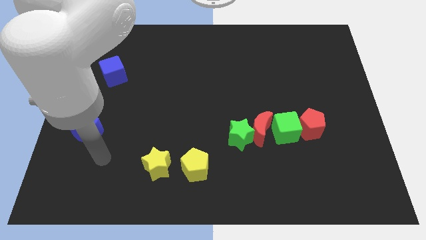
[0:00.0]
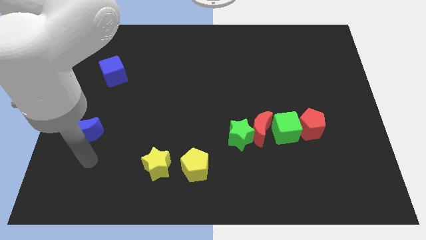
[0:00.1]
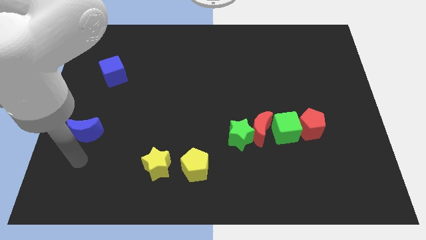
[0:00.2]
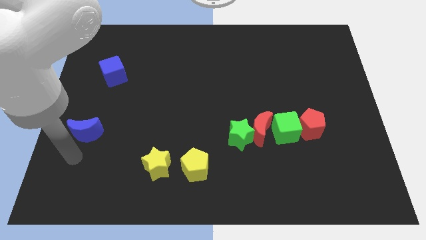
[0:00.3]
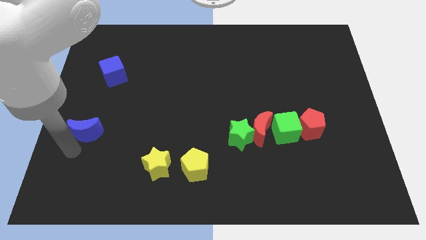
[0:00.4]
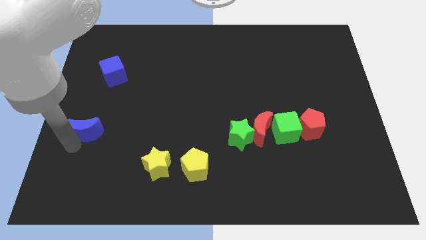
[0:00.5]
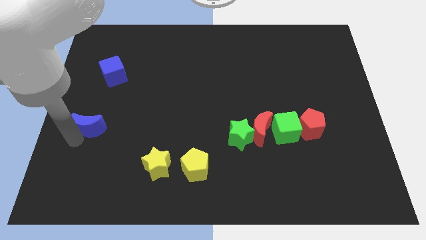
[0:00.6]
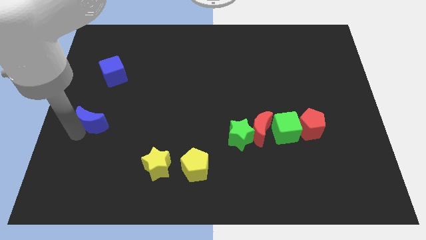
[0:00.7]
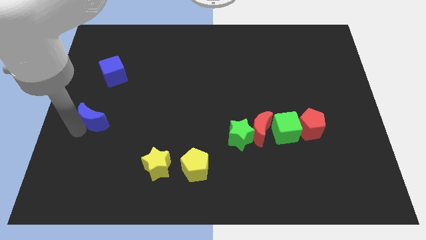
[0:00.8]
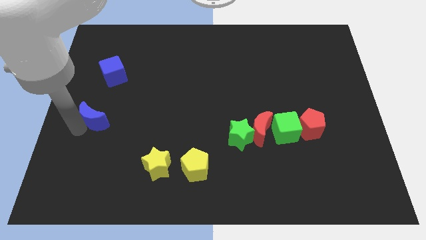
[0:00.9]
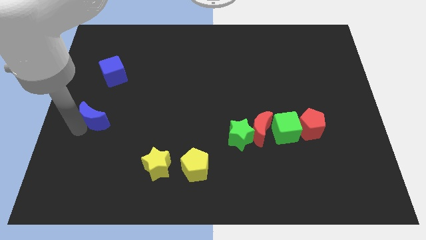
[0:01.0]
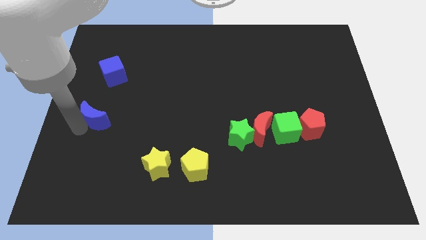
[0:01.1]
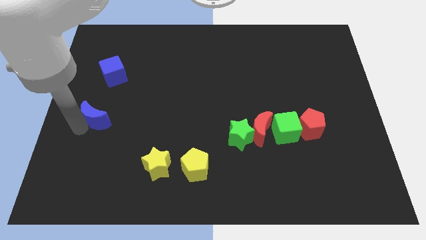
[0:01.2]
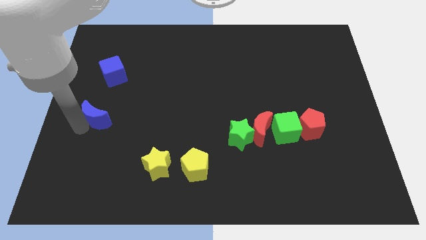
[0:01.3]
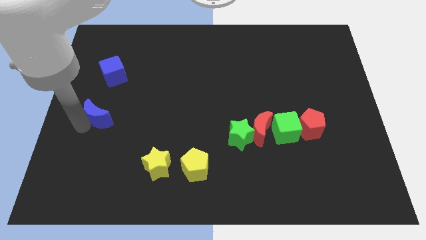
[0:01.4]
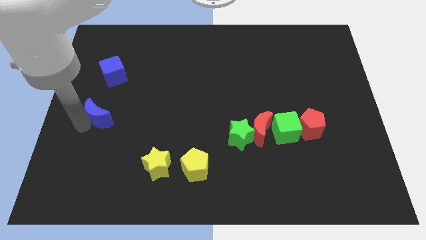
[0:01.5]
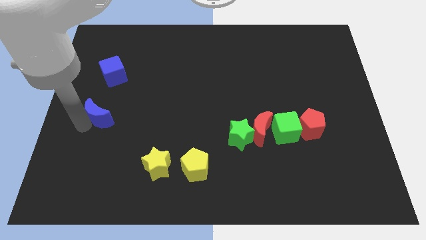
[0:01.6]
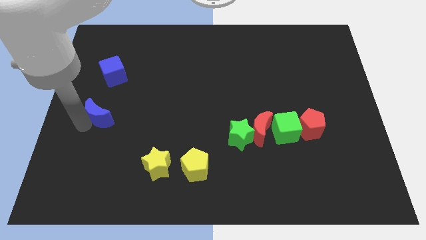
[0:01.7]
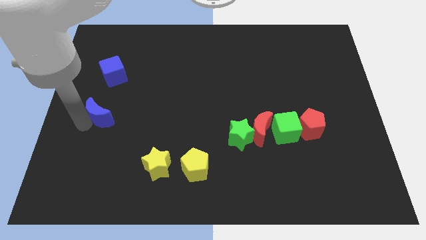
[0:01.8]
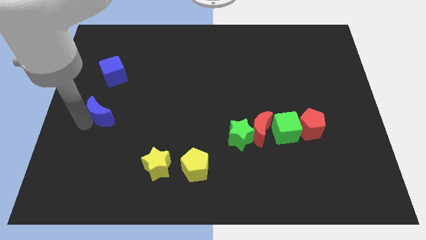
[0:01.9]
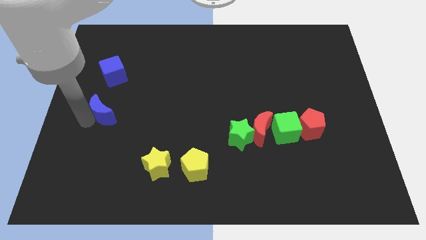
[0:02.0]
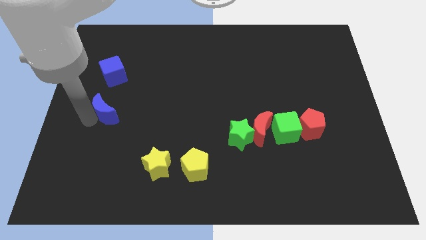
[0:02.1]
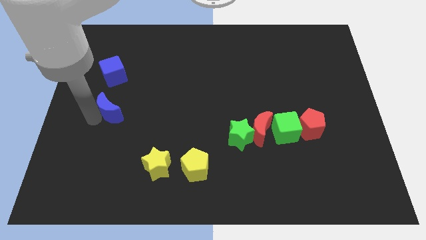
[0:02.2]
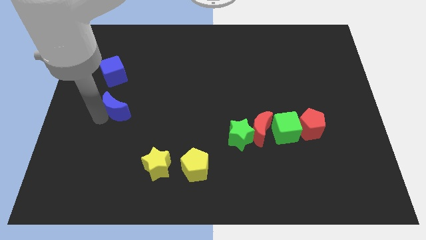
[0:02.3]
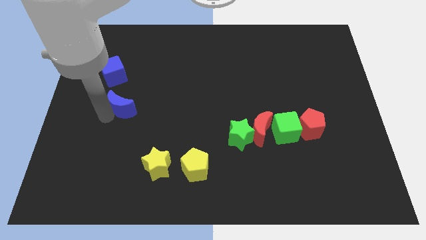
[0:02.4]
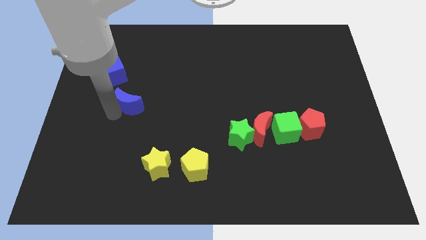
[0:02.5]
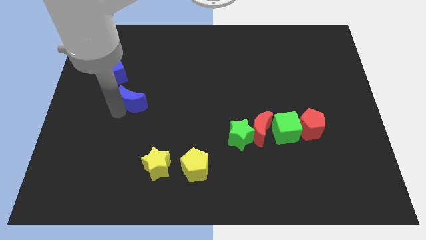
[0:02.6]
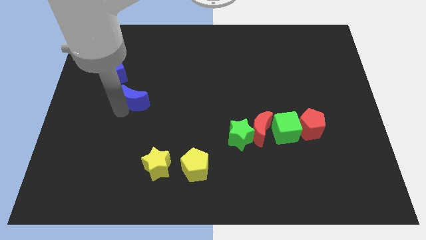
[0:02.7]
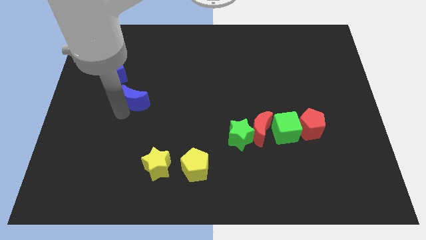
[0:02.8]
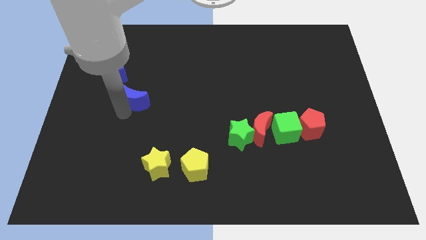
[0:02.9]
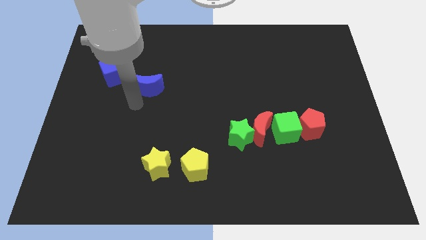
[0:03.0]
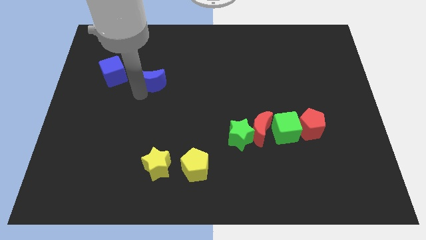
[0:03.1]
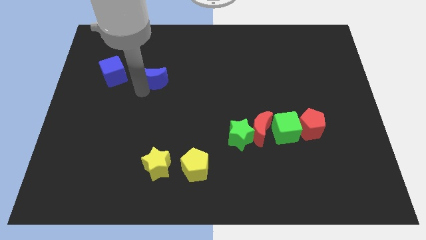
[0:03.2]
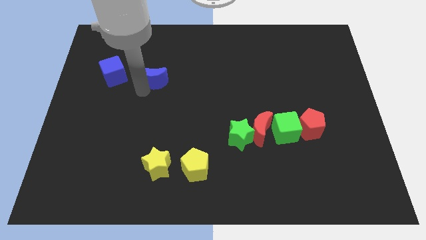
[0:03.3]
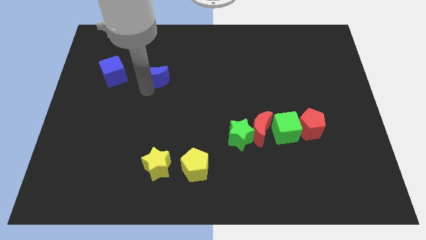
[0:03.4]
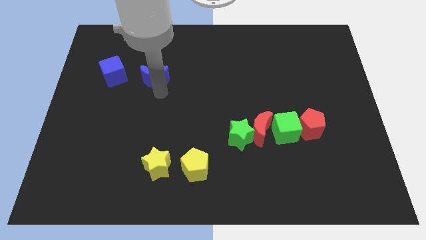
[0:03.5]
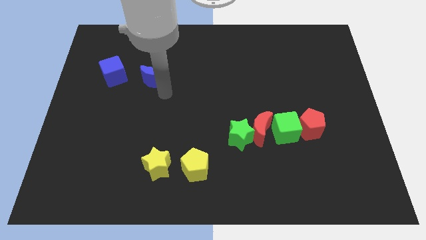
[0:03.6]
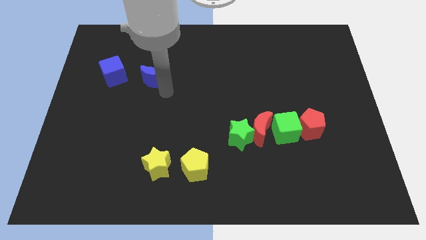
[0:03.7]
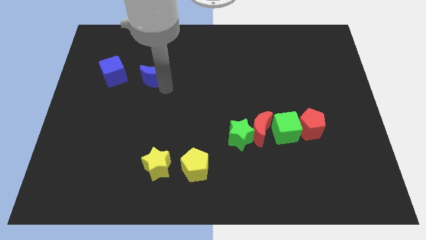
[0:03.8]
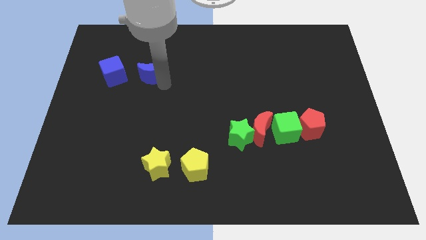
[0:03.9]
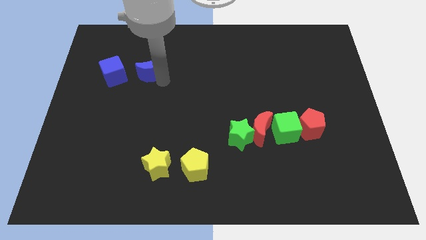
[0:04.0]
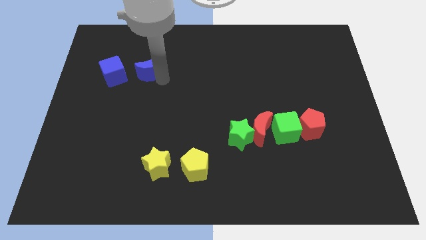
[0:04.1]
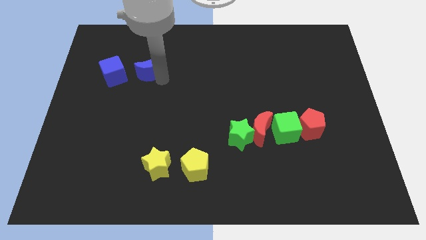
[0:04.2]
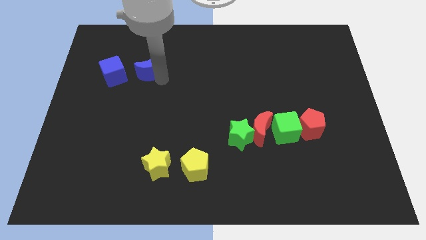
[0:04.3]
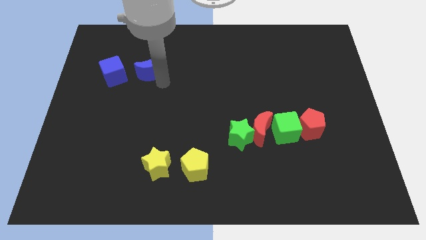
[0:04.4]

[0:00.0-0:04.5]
place the blue moon to the right of blue cube

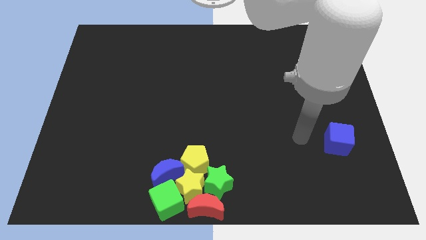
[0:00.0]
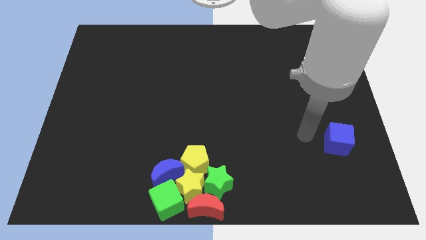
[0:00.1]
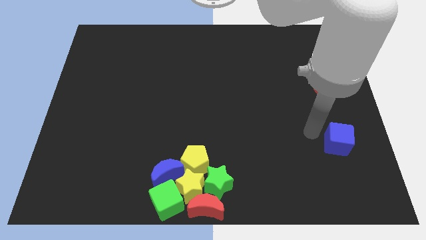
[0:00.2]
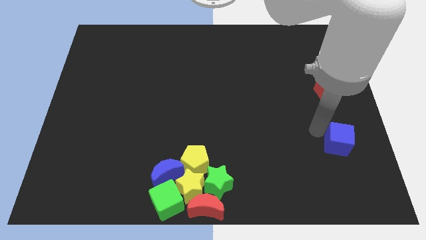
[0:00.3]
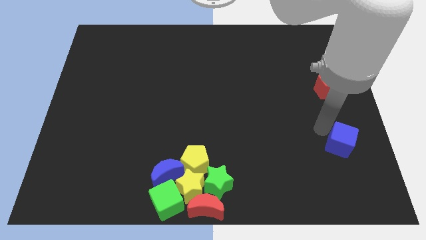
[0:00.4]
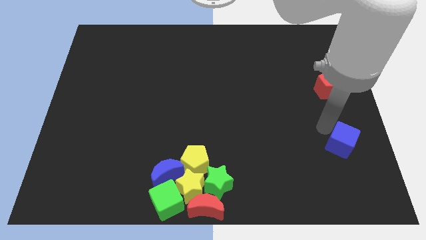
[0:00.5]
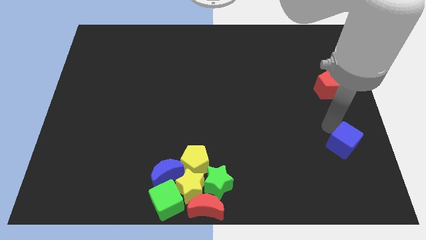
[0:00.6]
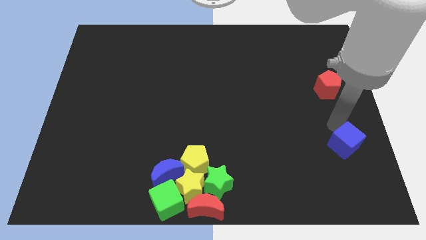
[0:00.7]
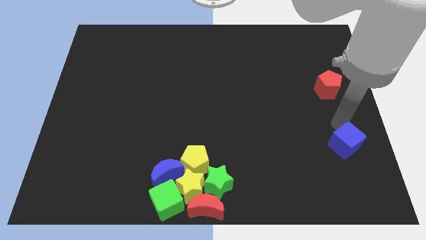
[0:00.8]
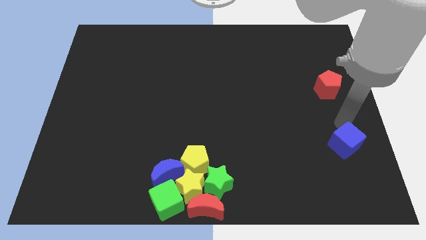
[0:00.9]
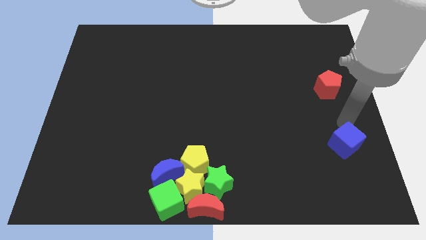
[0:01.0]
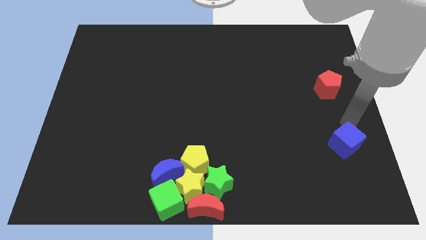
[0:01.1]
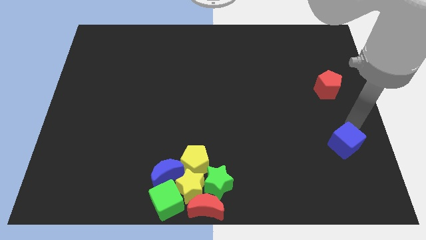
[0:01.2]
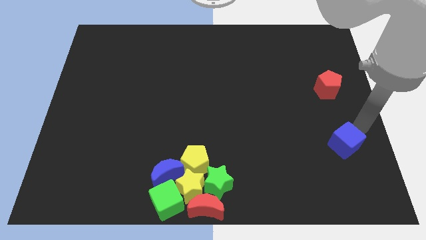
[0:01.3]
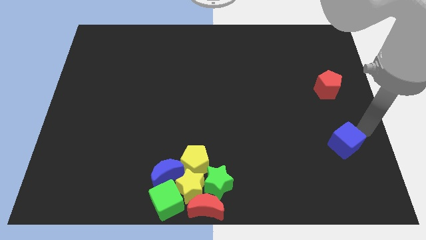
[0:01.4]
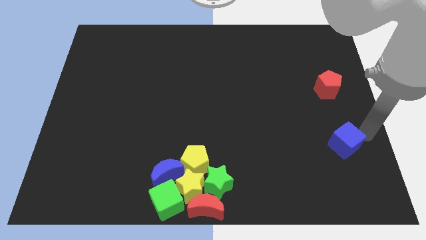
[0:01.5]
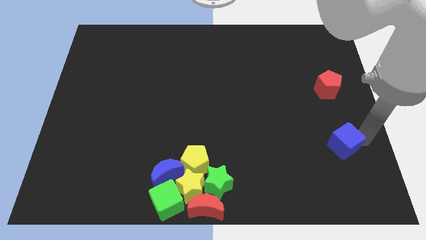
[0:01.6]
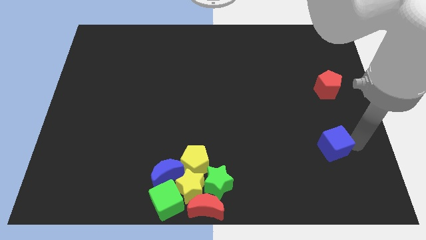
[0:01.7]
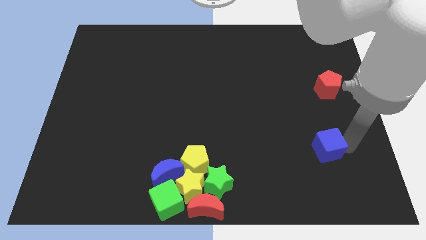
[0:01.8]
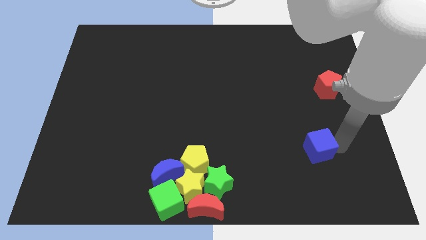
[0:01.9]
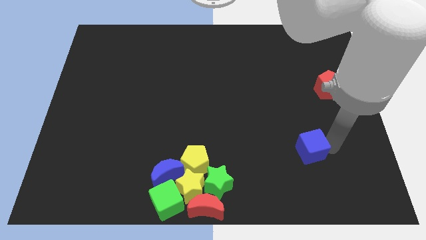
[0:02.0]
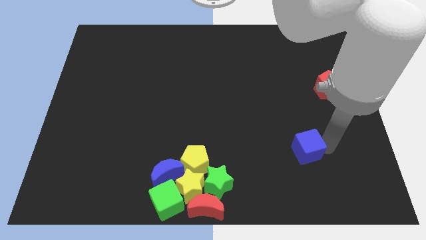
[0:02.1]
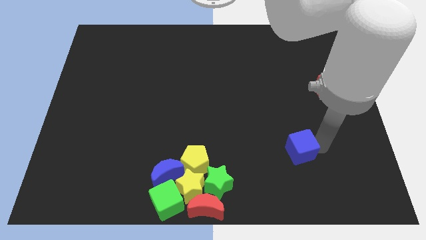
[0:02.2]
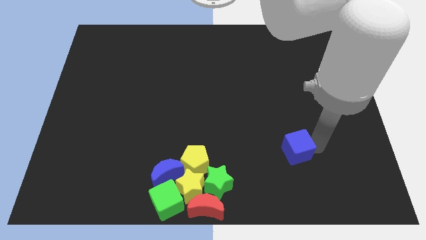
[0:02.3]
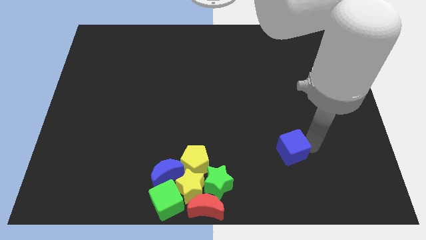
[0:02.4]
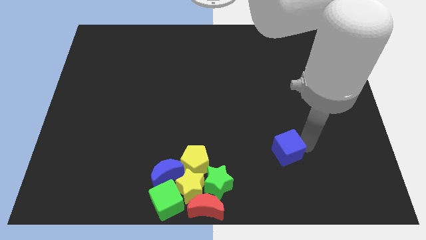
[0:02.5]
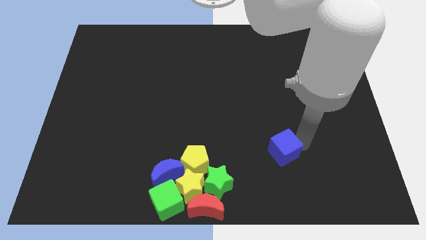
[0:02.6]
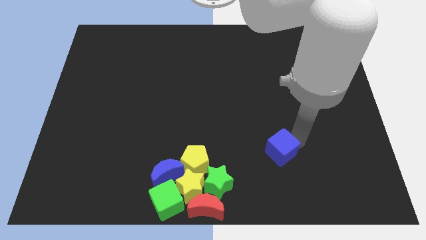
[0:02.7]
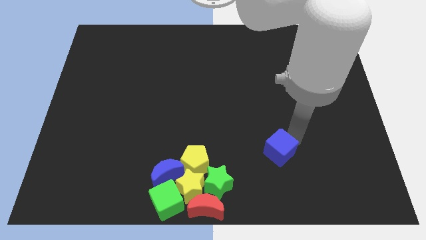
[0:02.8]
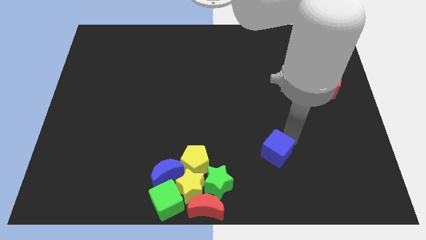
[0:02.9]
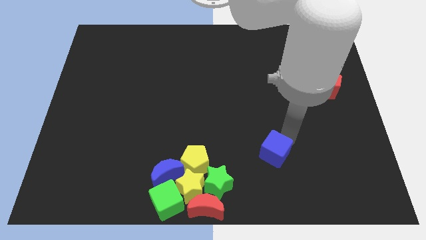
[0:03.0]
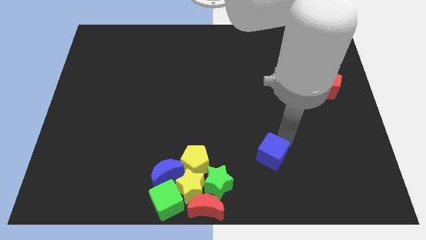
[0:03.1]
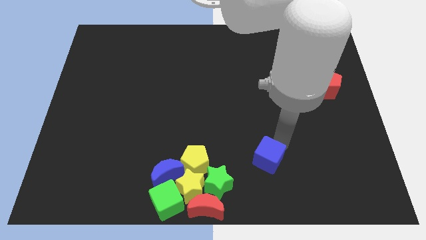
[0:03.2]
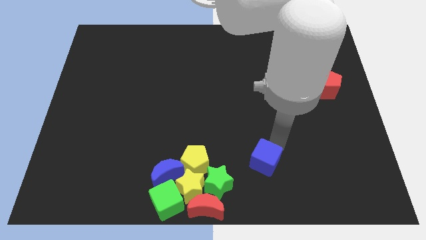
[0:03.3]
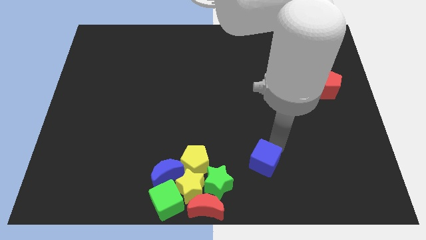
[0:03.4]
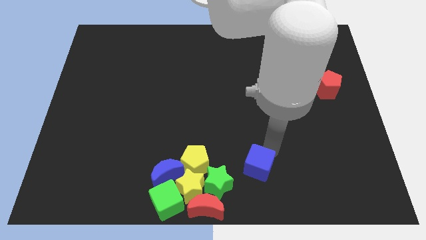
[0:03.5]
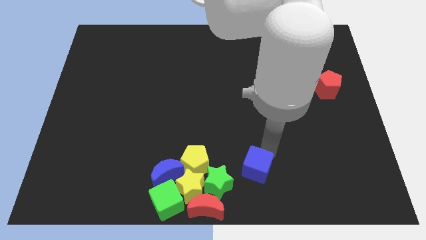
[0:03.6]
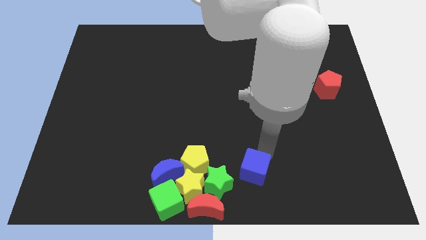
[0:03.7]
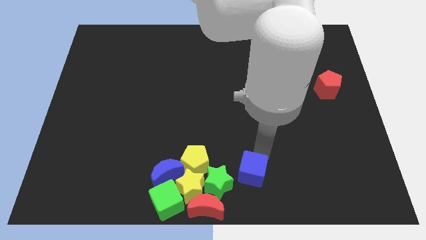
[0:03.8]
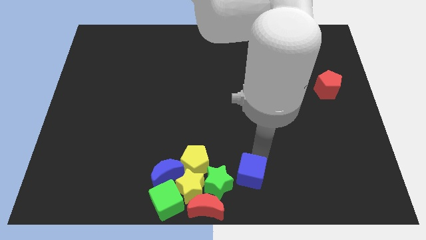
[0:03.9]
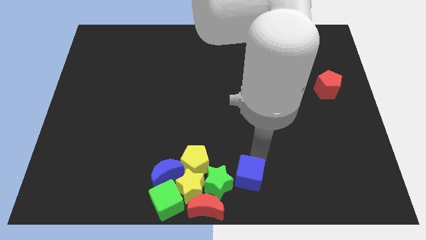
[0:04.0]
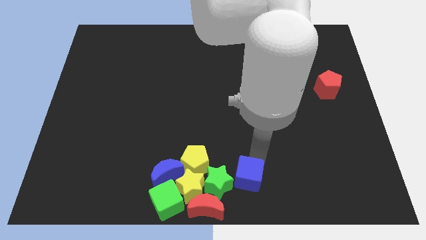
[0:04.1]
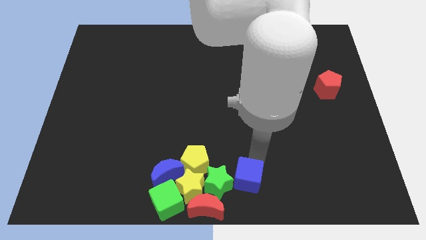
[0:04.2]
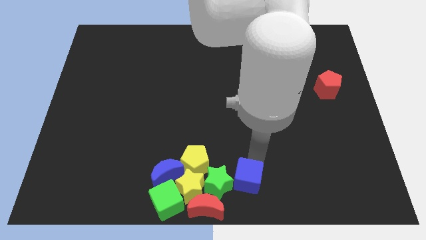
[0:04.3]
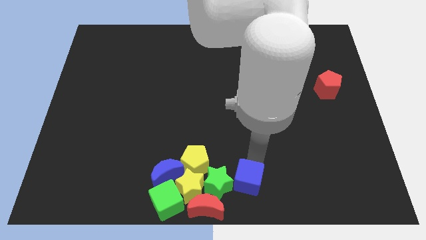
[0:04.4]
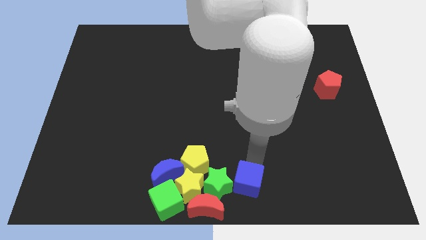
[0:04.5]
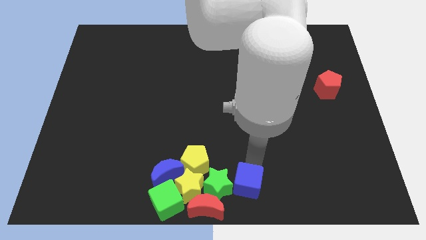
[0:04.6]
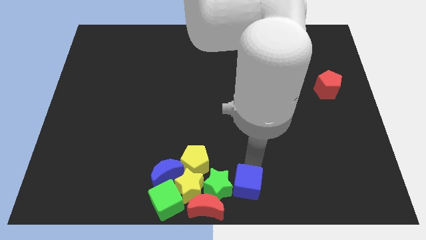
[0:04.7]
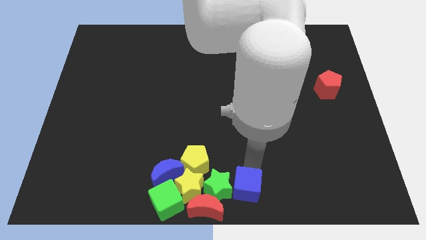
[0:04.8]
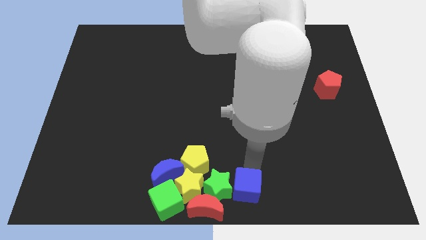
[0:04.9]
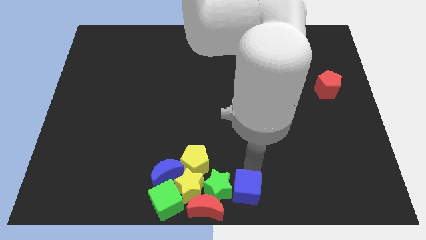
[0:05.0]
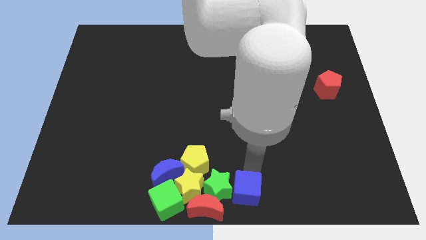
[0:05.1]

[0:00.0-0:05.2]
move the blue cube towards the green star
